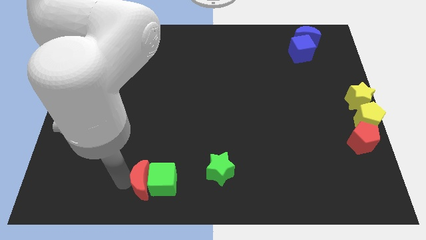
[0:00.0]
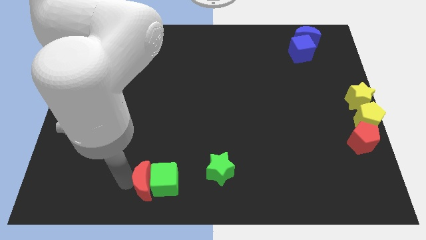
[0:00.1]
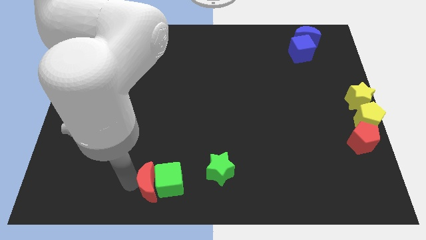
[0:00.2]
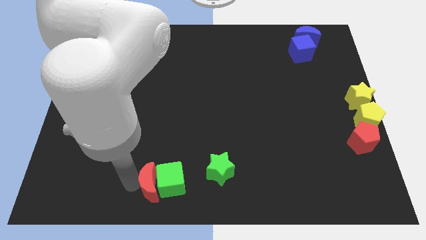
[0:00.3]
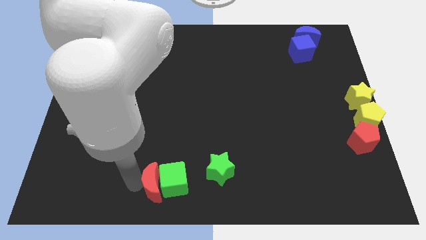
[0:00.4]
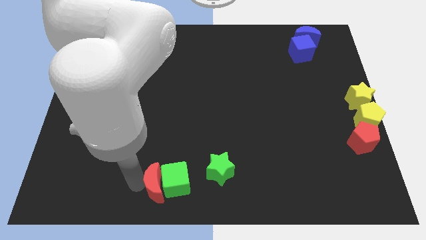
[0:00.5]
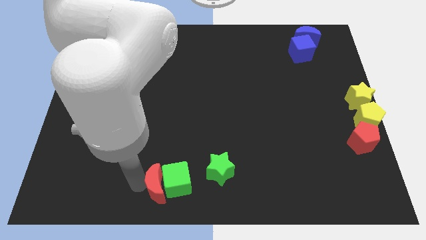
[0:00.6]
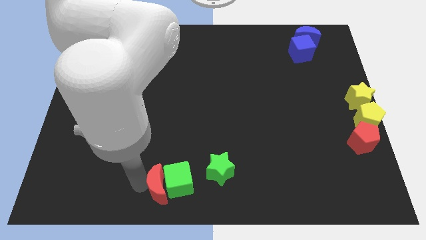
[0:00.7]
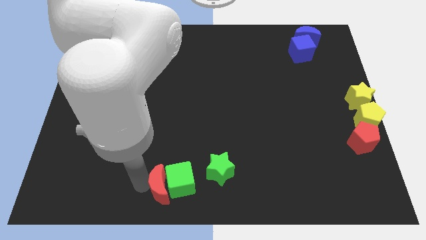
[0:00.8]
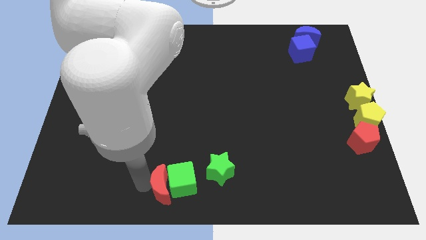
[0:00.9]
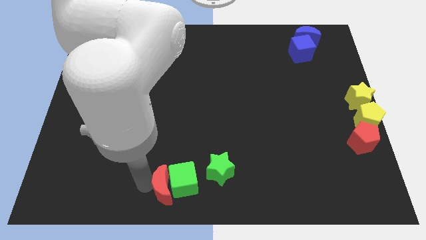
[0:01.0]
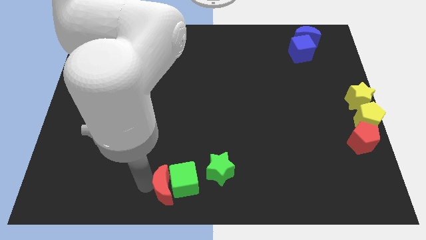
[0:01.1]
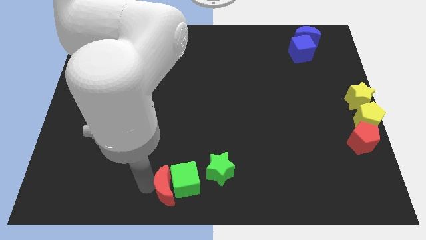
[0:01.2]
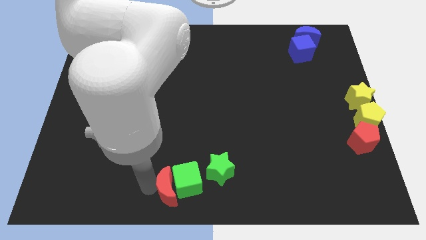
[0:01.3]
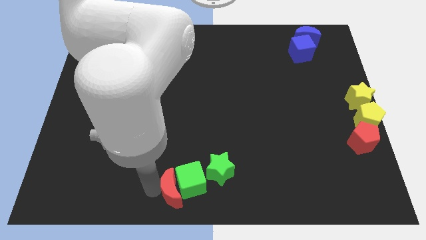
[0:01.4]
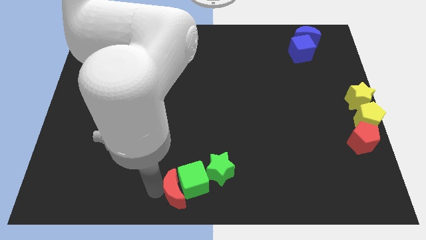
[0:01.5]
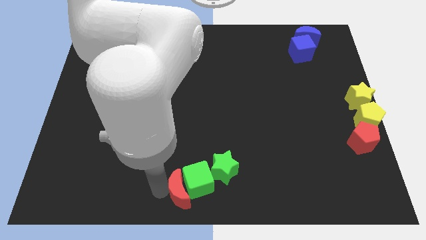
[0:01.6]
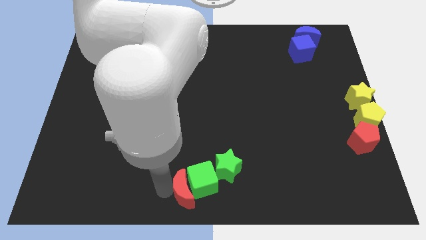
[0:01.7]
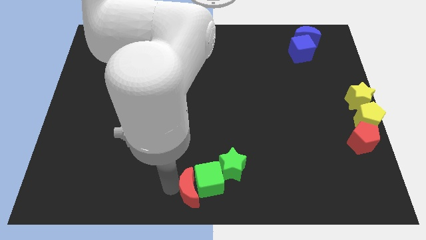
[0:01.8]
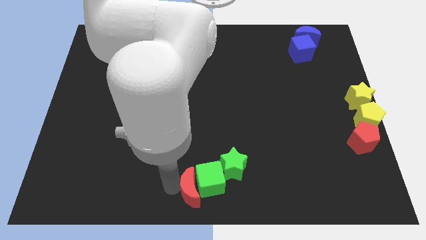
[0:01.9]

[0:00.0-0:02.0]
move the green cube along with red moon close to left side of green star

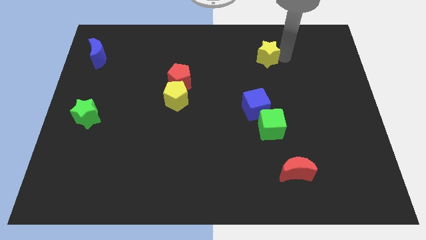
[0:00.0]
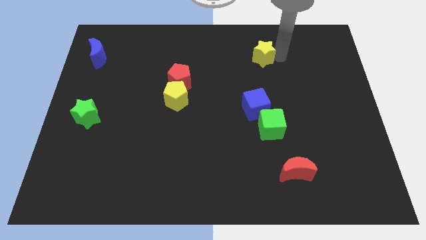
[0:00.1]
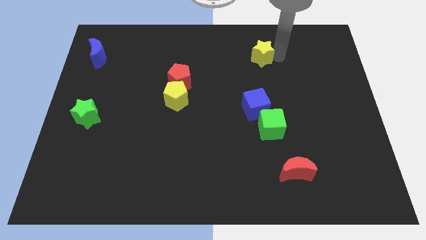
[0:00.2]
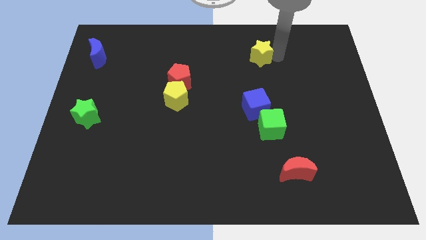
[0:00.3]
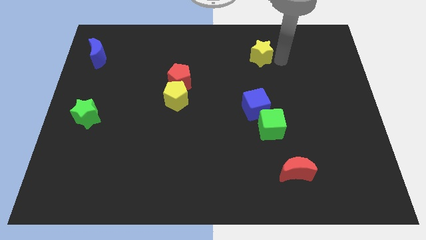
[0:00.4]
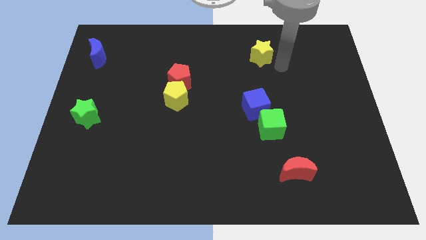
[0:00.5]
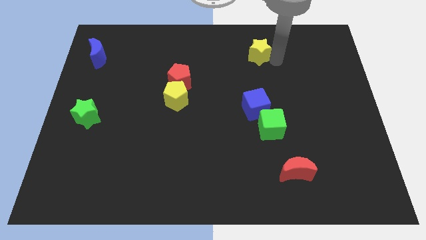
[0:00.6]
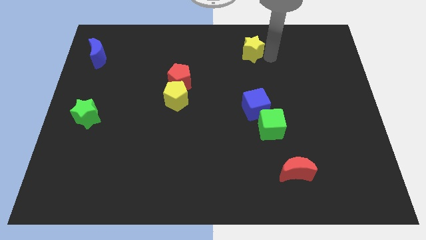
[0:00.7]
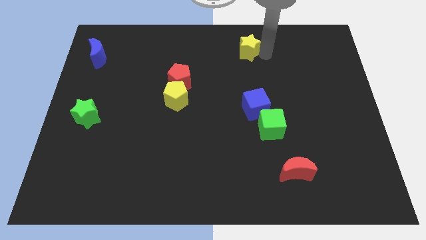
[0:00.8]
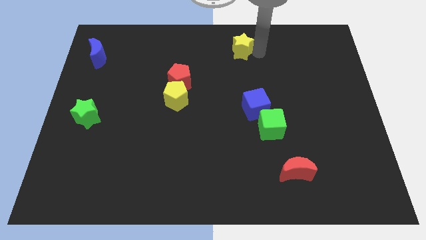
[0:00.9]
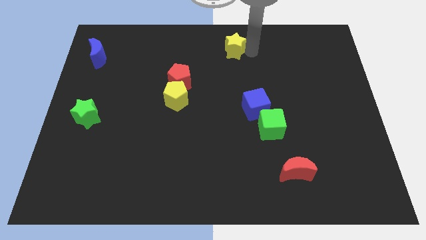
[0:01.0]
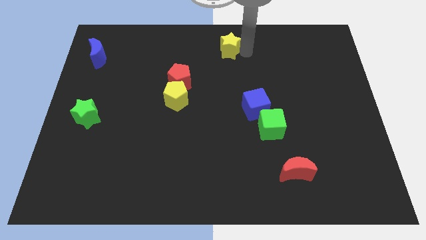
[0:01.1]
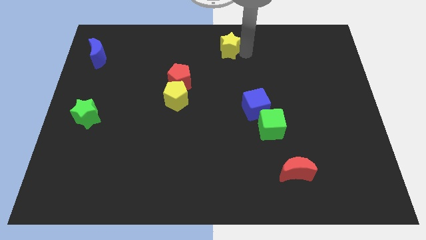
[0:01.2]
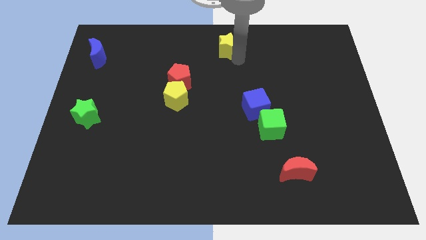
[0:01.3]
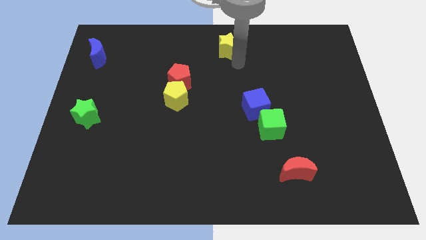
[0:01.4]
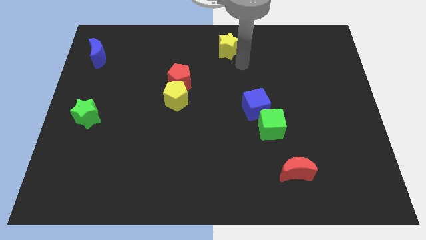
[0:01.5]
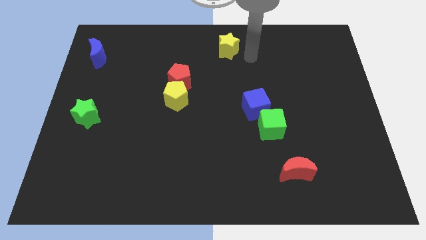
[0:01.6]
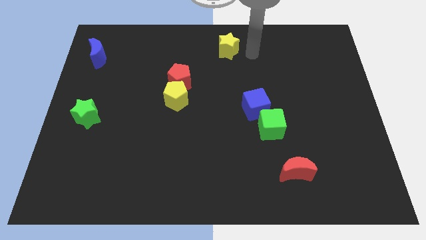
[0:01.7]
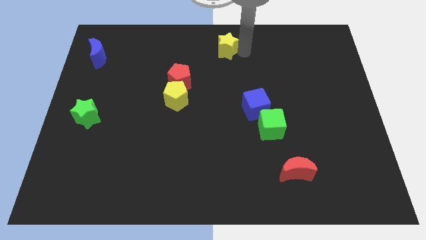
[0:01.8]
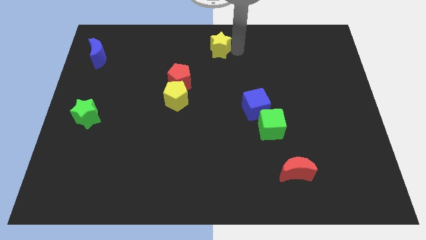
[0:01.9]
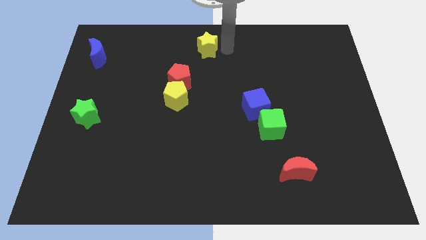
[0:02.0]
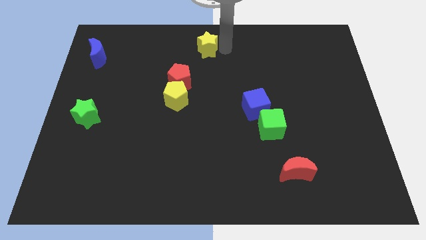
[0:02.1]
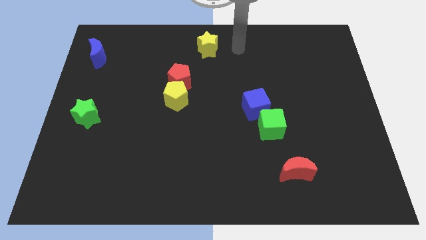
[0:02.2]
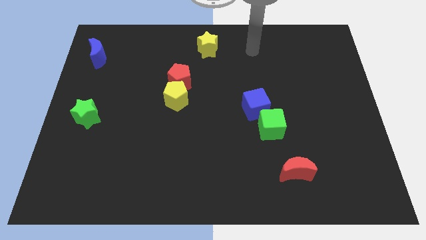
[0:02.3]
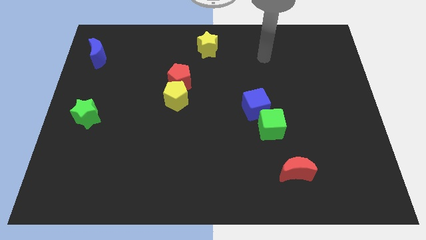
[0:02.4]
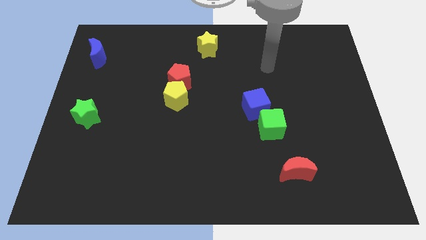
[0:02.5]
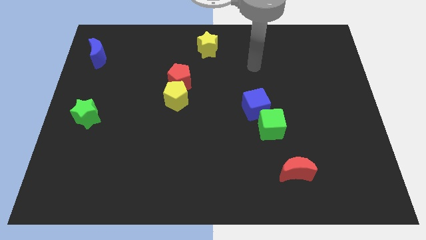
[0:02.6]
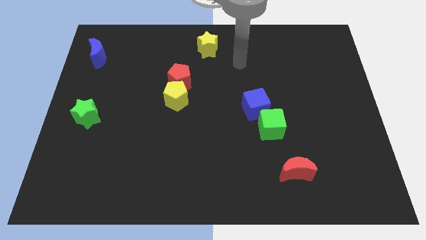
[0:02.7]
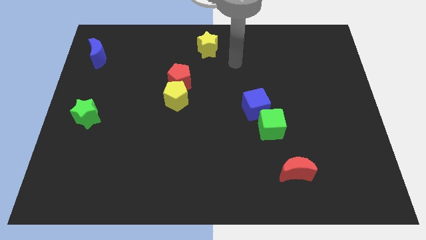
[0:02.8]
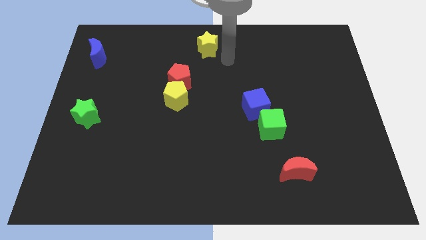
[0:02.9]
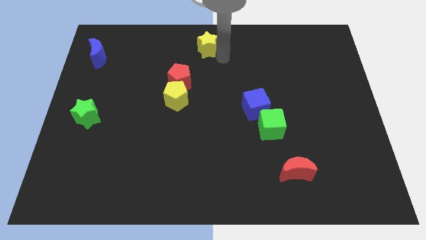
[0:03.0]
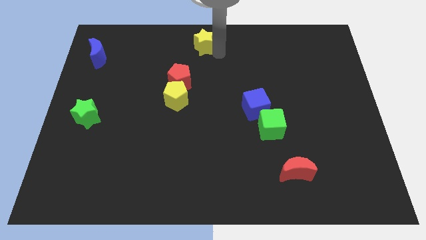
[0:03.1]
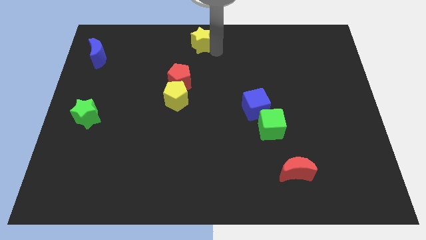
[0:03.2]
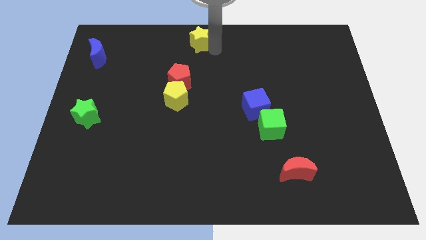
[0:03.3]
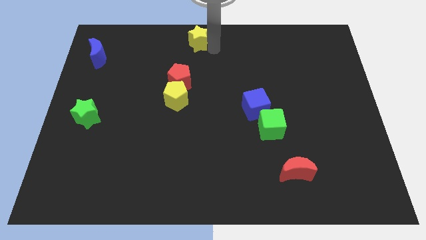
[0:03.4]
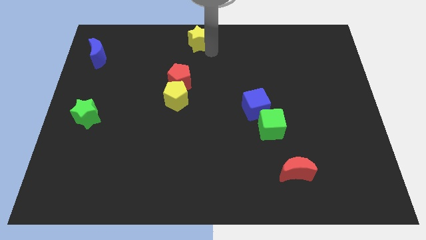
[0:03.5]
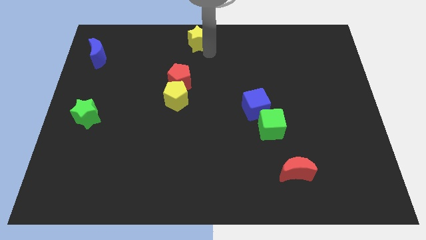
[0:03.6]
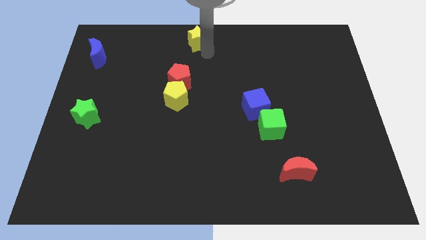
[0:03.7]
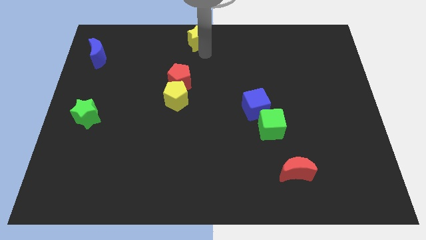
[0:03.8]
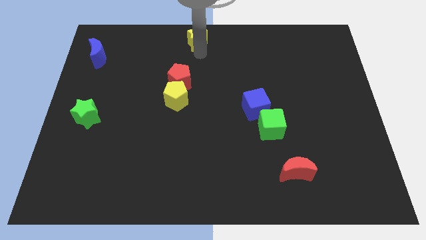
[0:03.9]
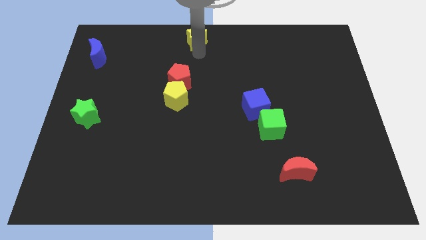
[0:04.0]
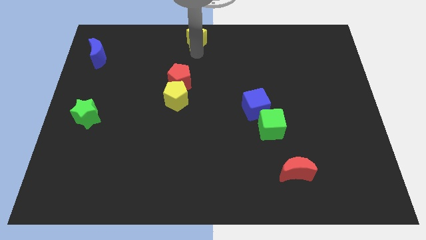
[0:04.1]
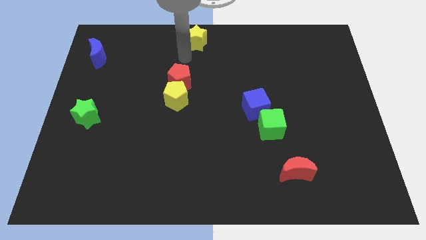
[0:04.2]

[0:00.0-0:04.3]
push the yellow star at the top center

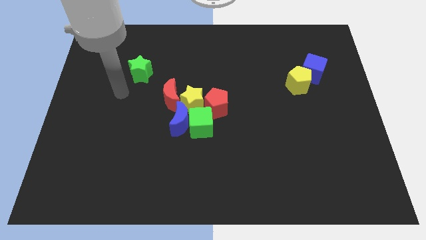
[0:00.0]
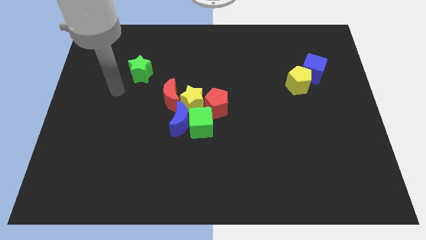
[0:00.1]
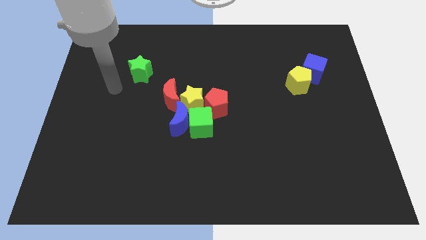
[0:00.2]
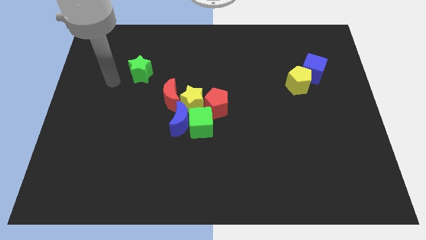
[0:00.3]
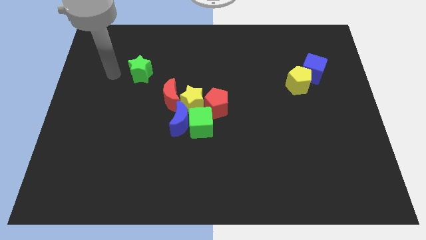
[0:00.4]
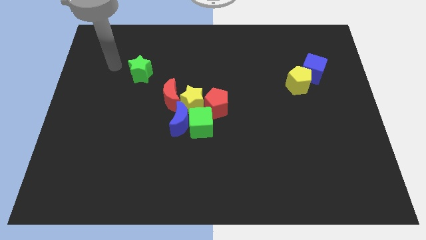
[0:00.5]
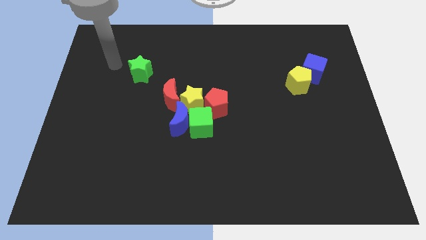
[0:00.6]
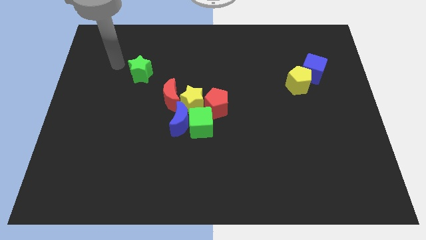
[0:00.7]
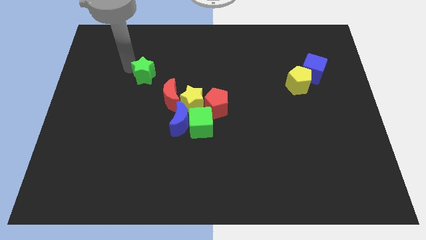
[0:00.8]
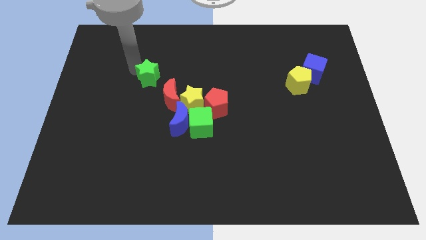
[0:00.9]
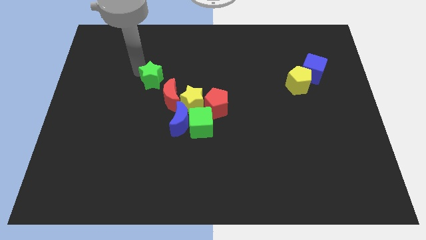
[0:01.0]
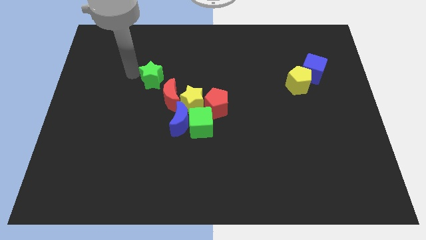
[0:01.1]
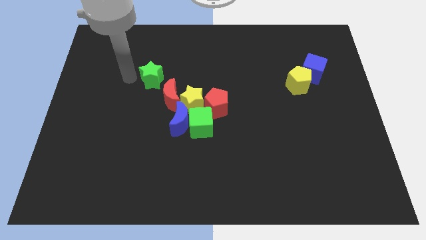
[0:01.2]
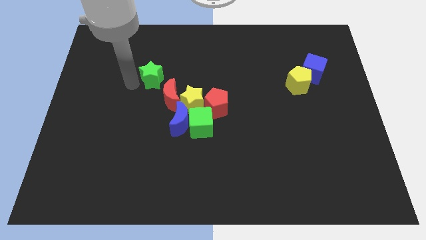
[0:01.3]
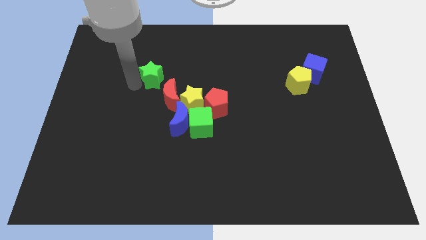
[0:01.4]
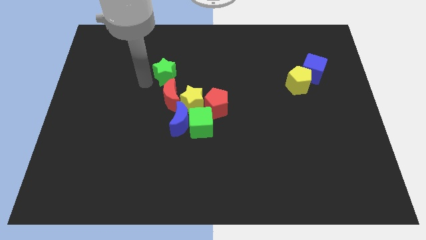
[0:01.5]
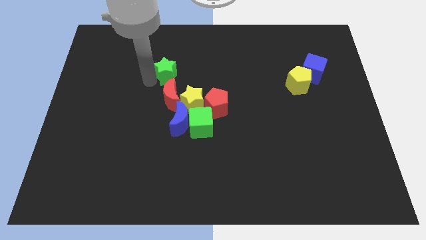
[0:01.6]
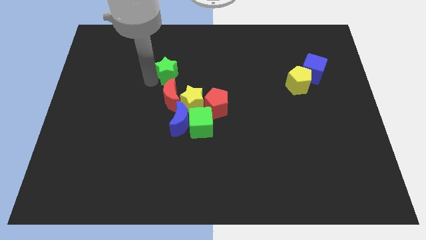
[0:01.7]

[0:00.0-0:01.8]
place the green star above red moon

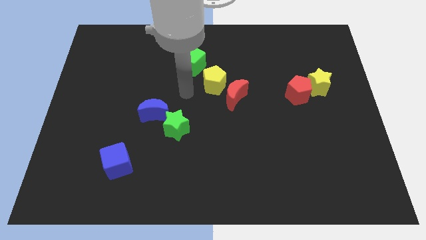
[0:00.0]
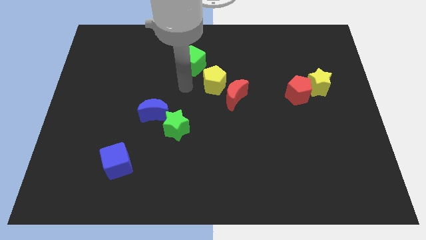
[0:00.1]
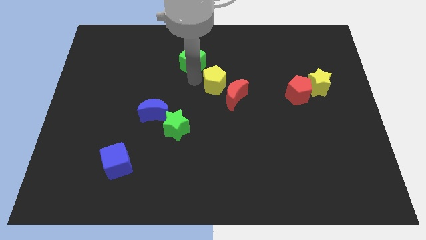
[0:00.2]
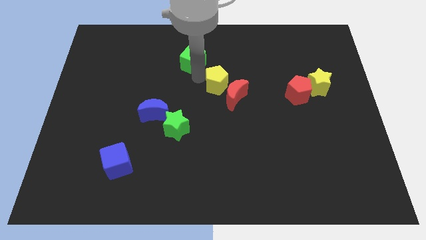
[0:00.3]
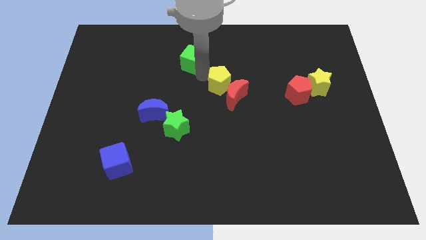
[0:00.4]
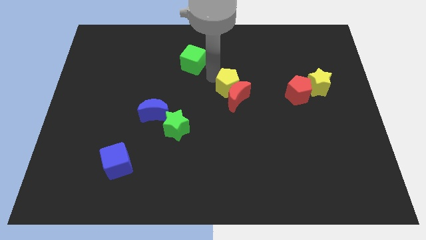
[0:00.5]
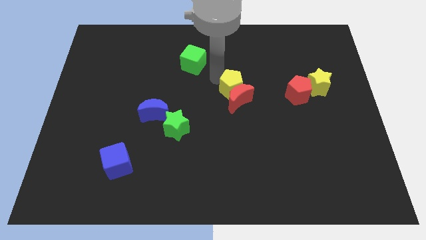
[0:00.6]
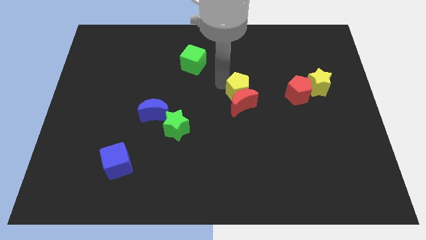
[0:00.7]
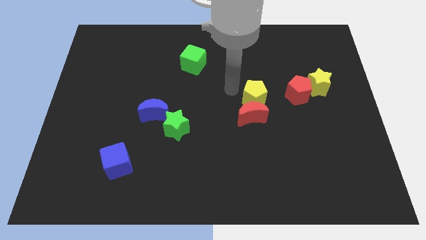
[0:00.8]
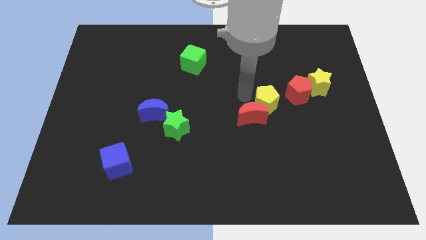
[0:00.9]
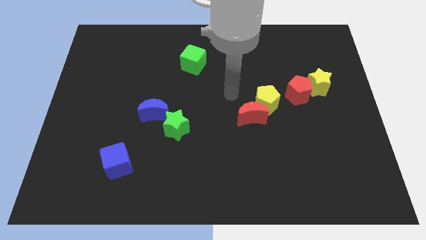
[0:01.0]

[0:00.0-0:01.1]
push the red crescent along with the yellow pentagon towards the center of the board
